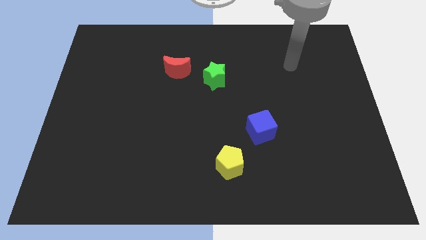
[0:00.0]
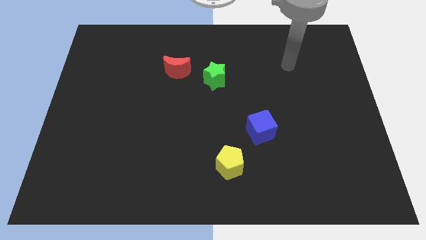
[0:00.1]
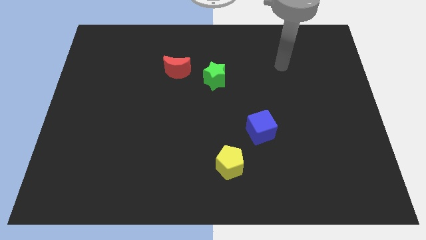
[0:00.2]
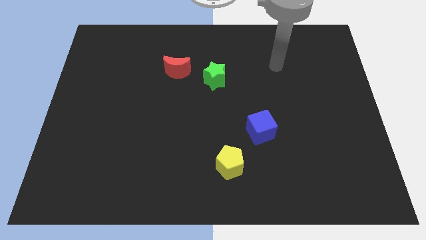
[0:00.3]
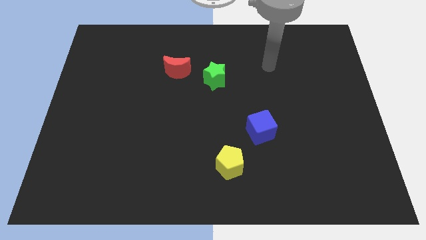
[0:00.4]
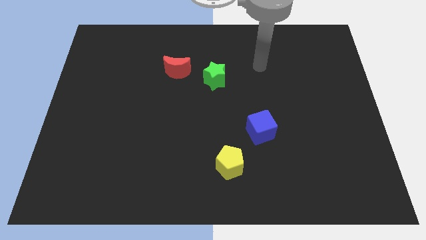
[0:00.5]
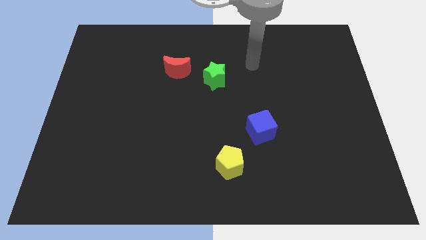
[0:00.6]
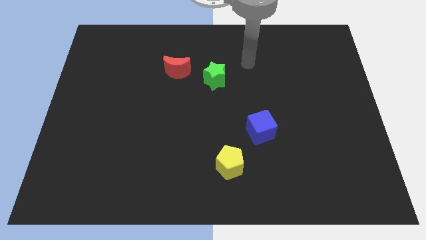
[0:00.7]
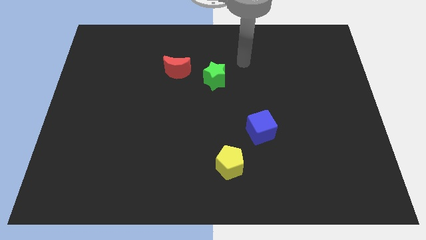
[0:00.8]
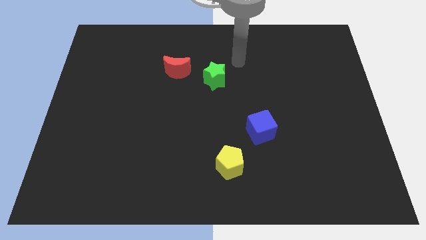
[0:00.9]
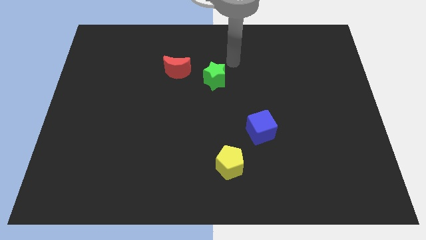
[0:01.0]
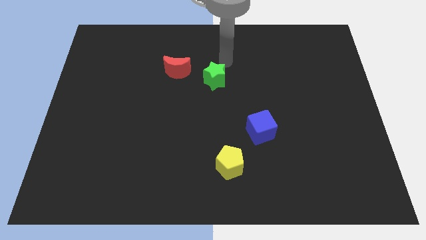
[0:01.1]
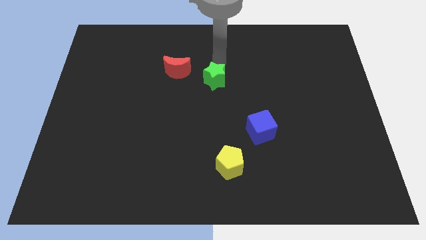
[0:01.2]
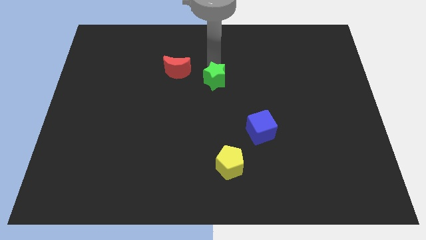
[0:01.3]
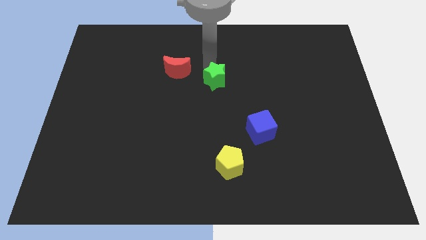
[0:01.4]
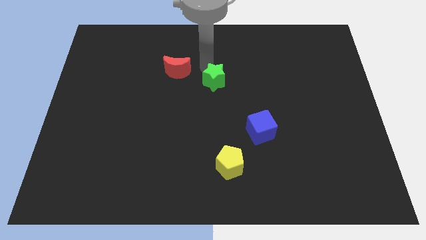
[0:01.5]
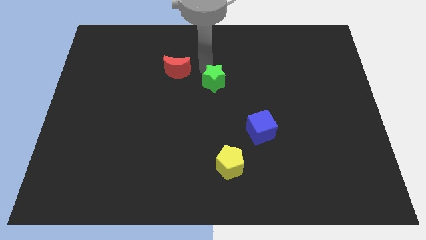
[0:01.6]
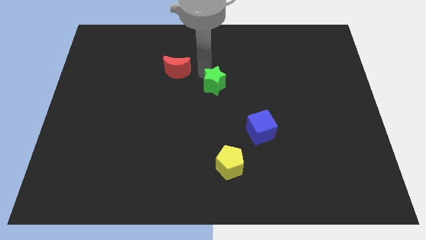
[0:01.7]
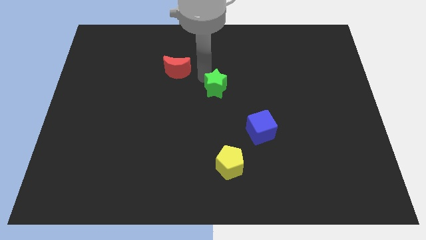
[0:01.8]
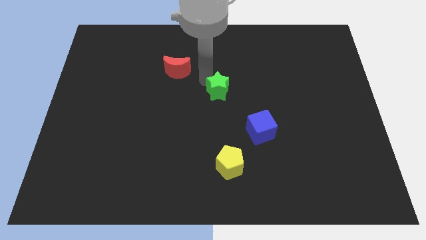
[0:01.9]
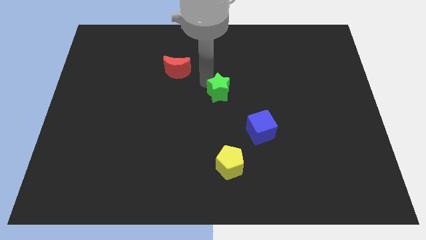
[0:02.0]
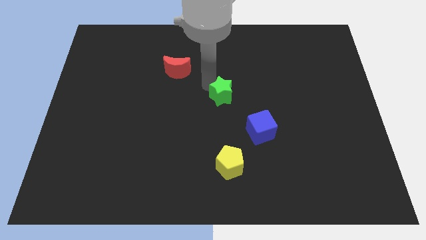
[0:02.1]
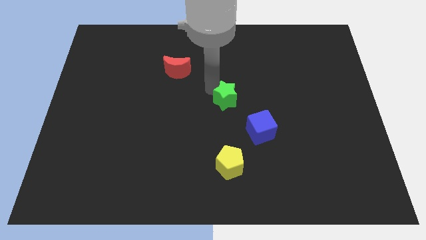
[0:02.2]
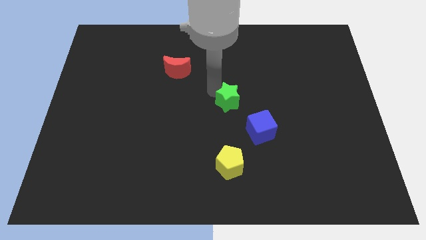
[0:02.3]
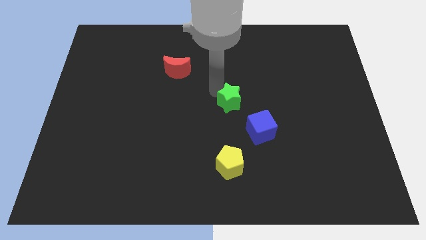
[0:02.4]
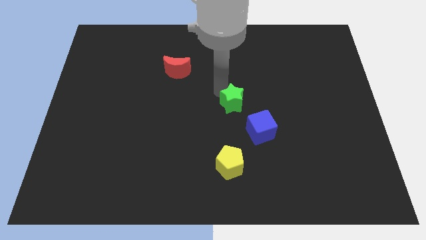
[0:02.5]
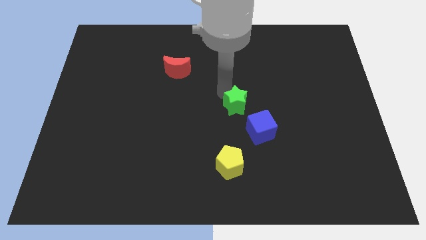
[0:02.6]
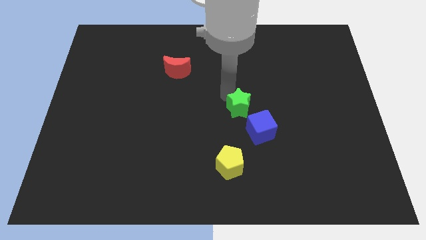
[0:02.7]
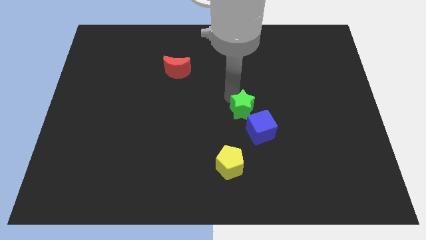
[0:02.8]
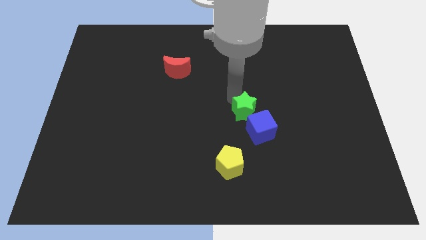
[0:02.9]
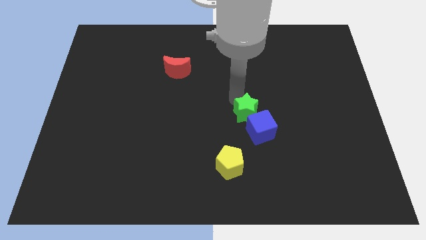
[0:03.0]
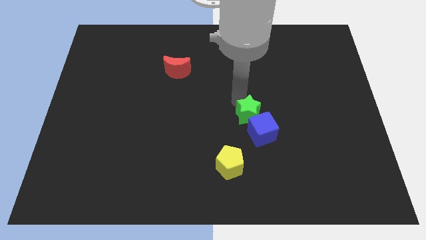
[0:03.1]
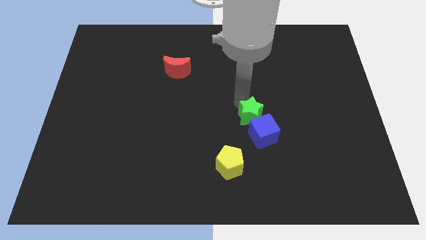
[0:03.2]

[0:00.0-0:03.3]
move the green block to the blue block

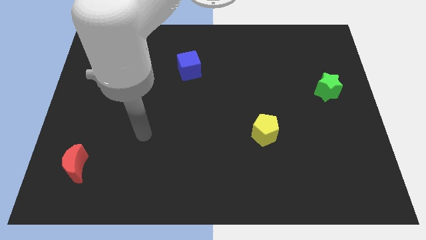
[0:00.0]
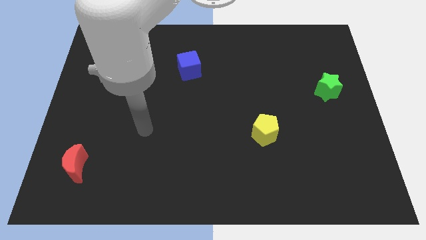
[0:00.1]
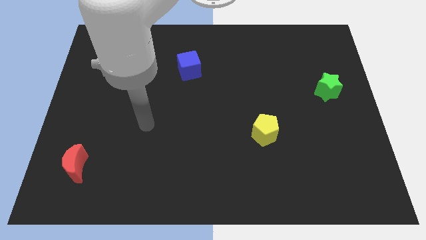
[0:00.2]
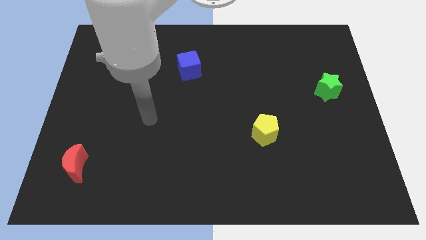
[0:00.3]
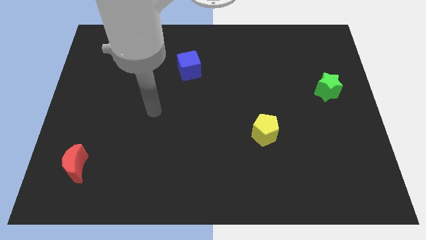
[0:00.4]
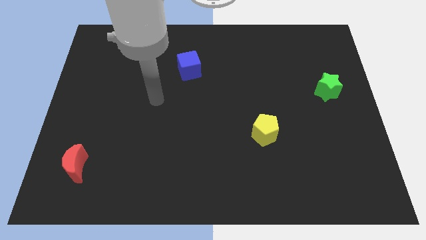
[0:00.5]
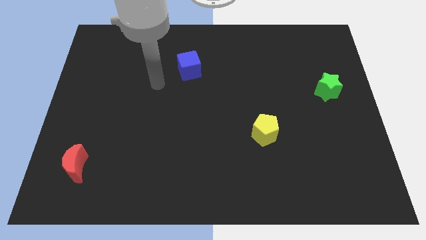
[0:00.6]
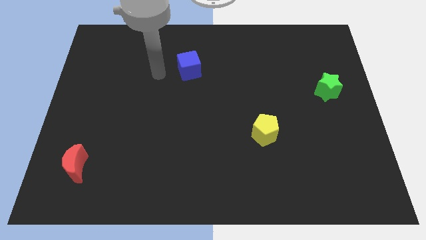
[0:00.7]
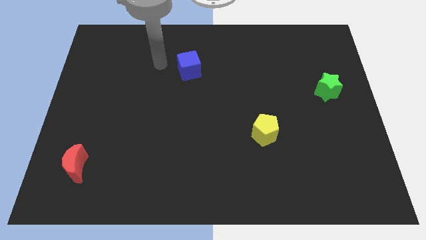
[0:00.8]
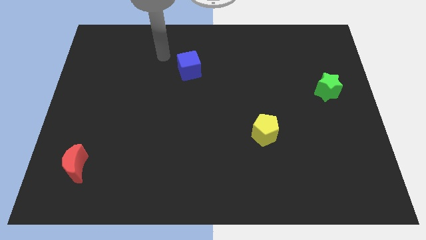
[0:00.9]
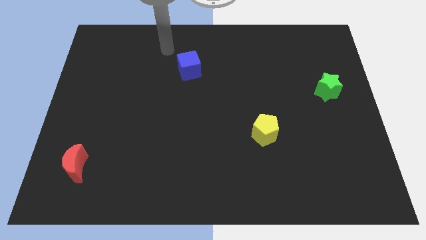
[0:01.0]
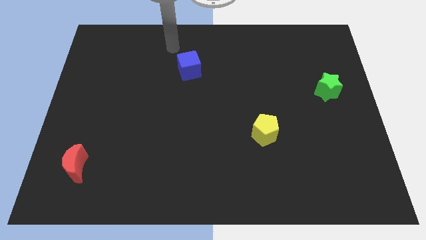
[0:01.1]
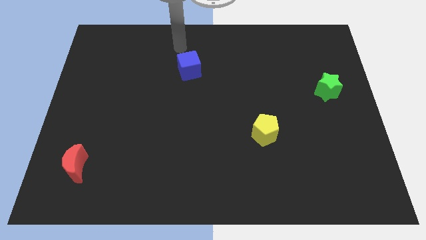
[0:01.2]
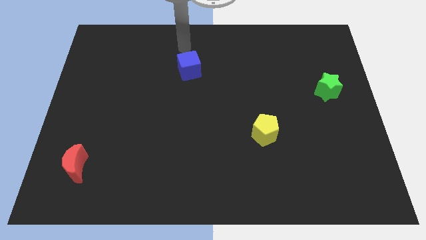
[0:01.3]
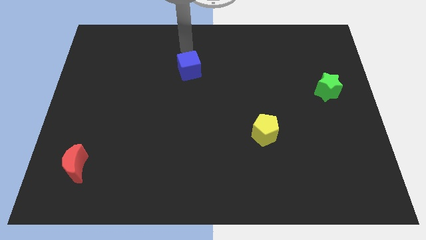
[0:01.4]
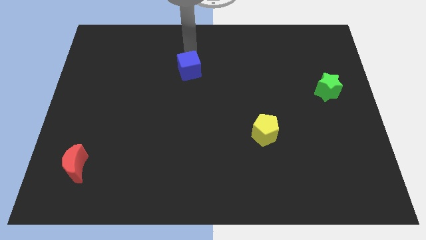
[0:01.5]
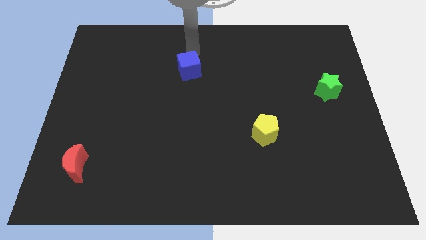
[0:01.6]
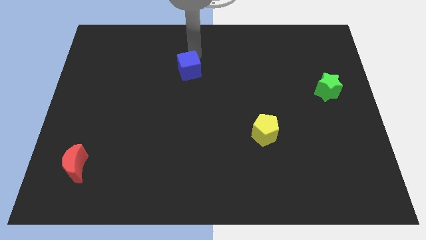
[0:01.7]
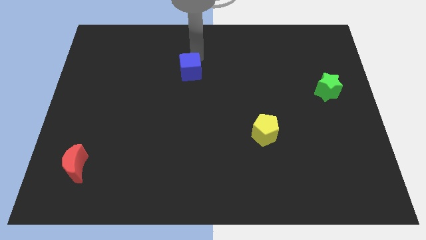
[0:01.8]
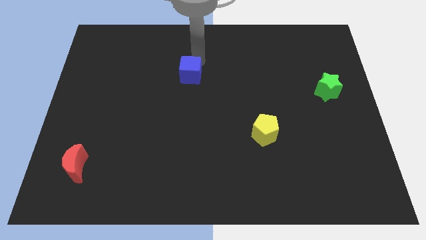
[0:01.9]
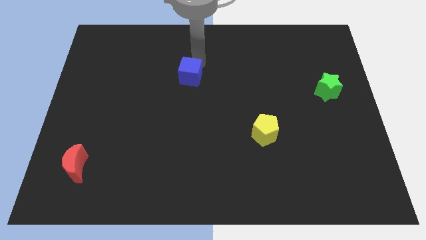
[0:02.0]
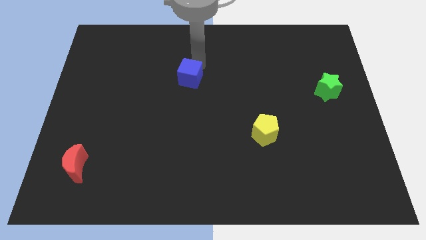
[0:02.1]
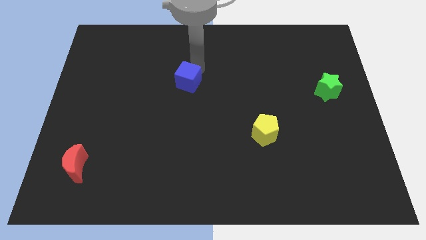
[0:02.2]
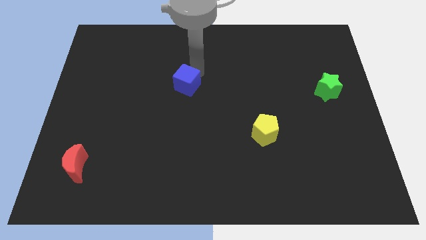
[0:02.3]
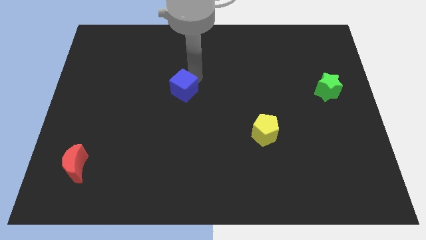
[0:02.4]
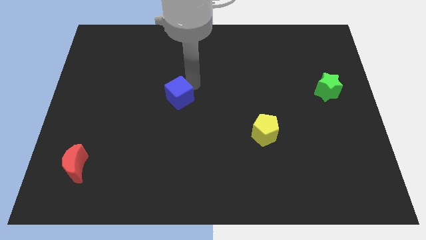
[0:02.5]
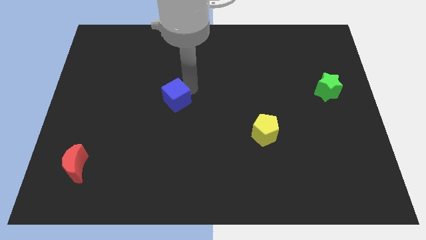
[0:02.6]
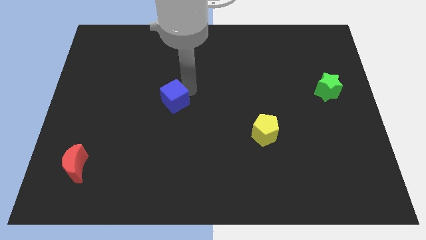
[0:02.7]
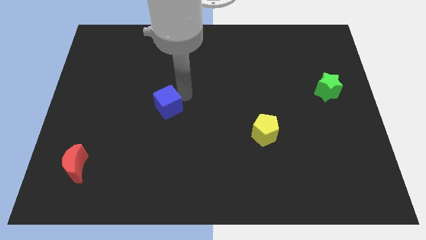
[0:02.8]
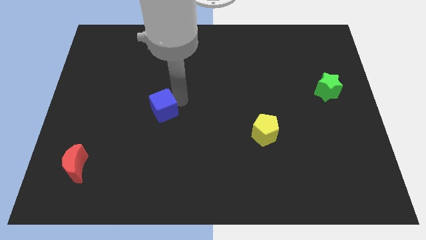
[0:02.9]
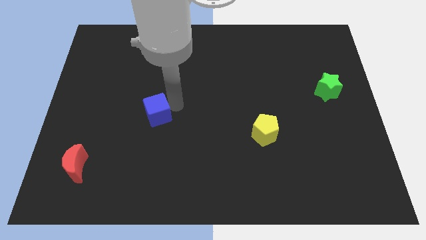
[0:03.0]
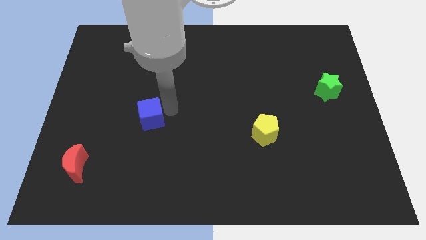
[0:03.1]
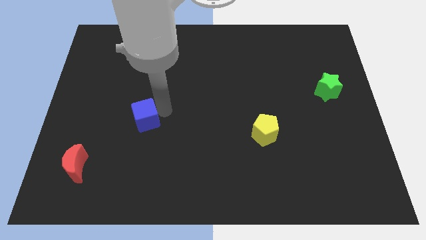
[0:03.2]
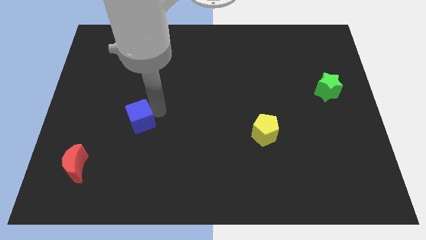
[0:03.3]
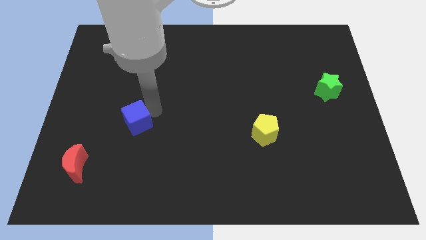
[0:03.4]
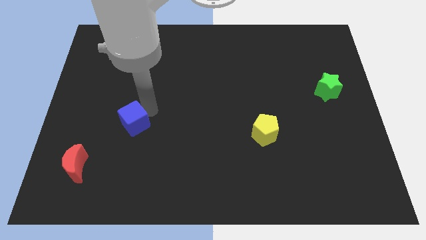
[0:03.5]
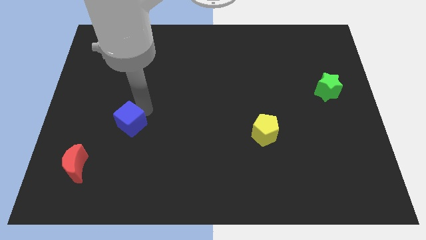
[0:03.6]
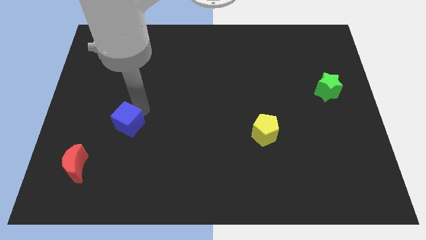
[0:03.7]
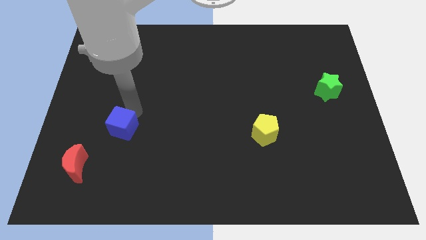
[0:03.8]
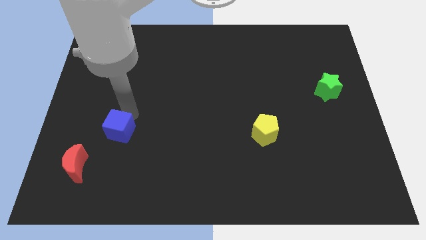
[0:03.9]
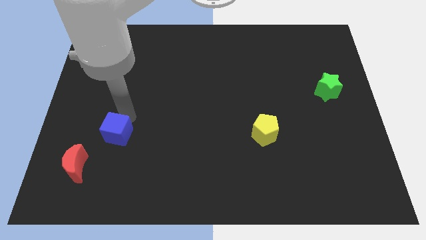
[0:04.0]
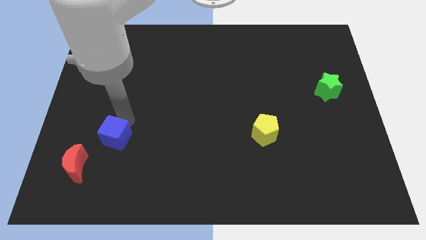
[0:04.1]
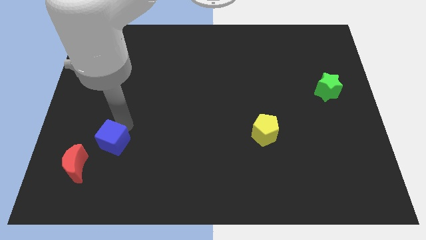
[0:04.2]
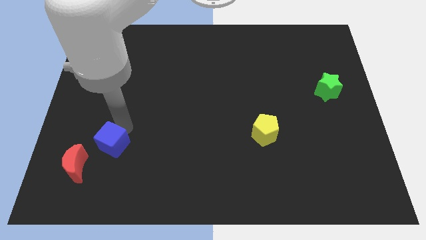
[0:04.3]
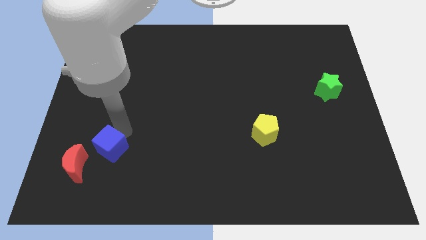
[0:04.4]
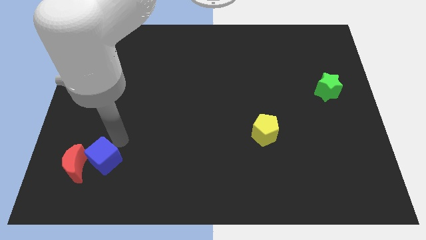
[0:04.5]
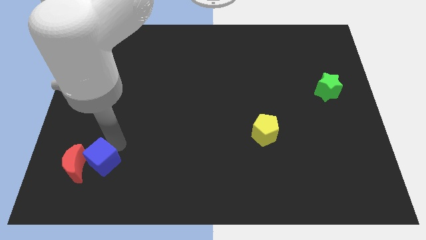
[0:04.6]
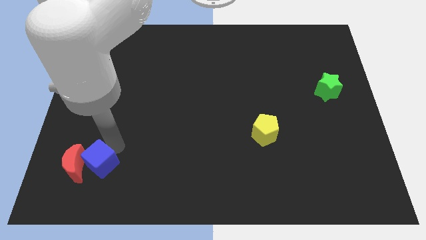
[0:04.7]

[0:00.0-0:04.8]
move the blue block next to the moon

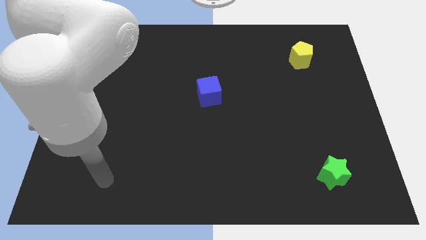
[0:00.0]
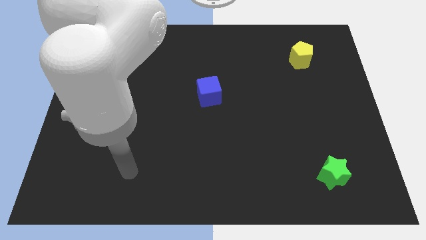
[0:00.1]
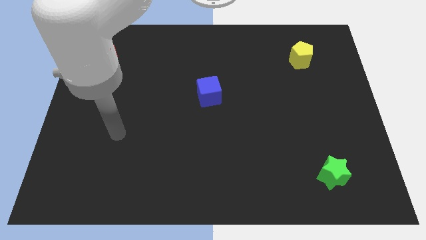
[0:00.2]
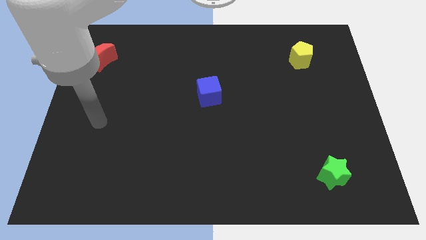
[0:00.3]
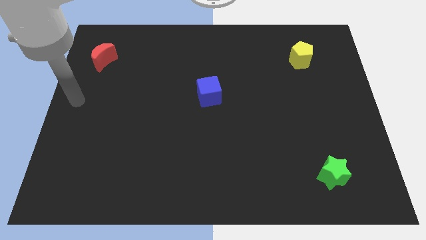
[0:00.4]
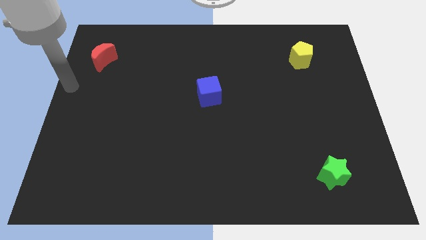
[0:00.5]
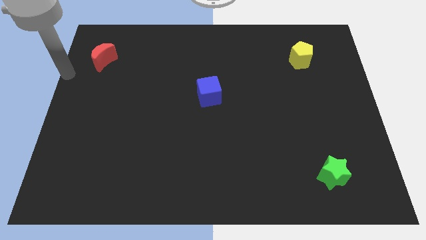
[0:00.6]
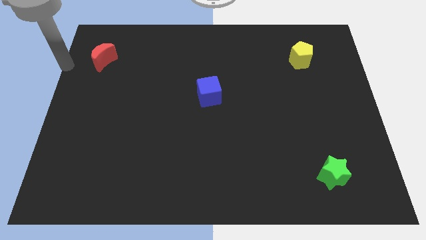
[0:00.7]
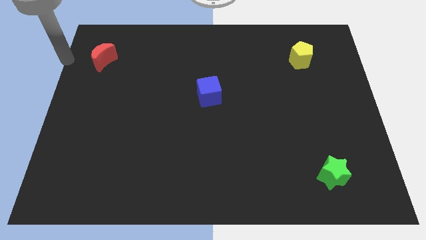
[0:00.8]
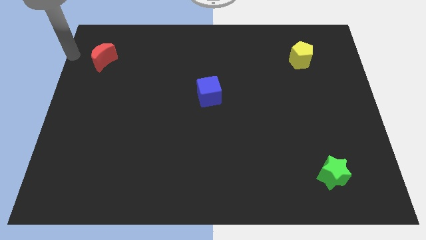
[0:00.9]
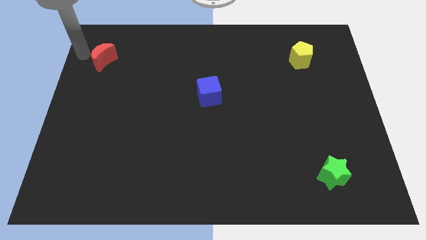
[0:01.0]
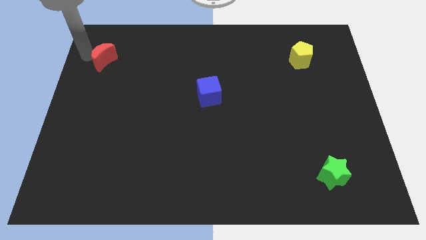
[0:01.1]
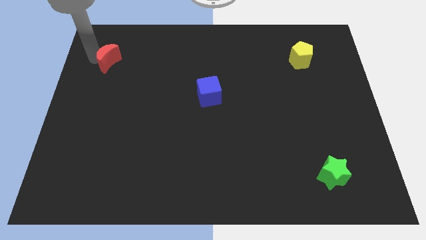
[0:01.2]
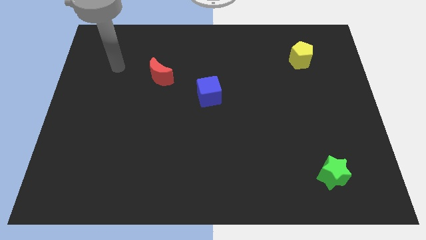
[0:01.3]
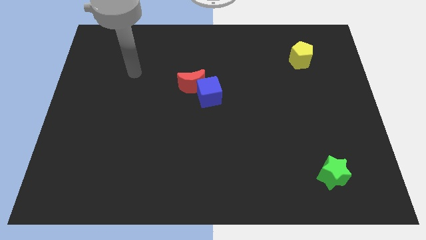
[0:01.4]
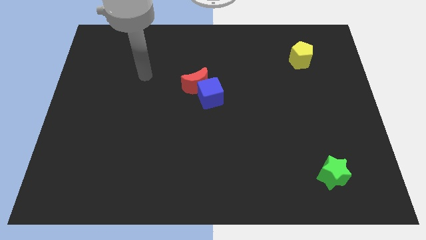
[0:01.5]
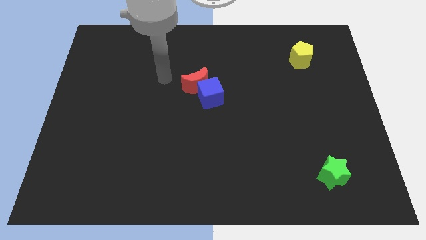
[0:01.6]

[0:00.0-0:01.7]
slide the red moon towards the blue cube
